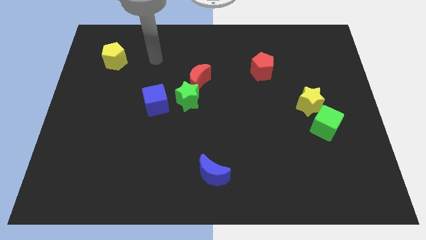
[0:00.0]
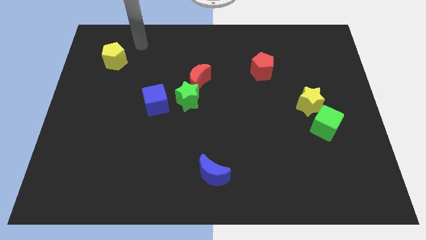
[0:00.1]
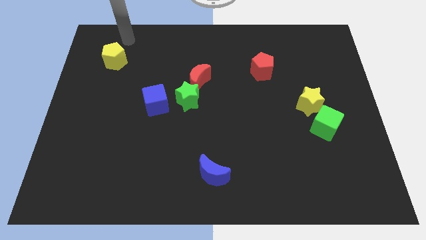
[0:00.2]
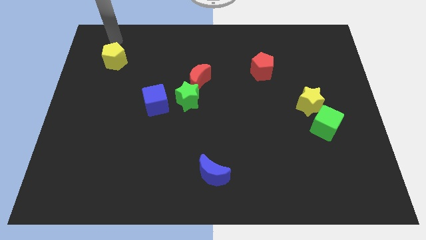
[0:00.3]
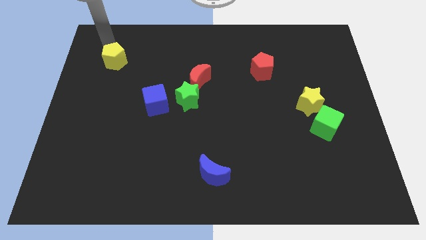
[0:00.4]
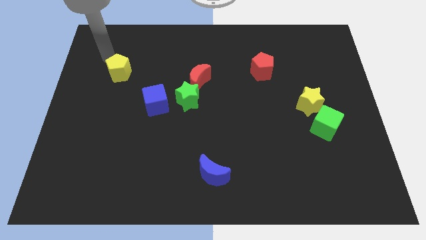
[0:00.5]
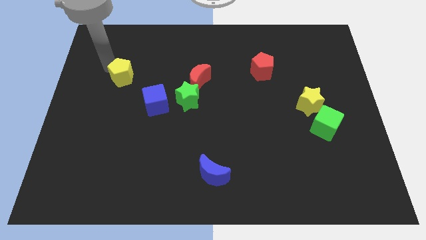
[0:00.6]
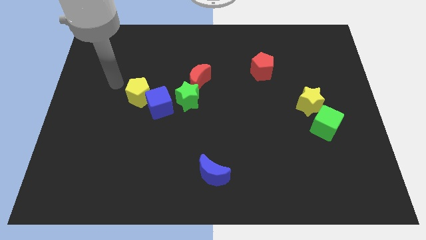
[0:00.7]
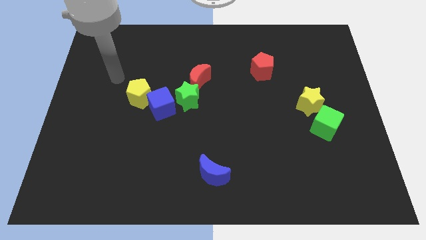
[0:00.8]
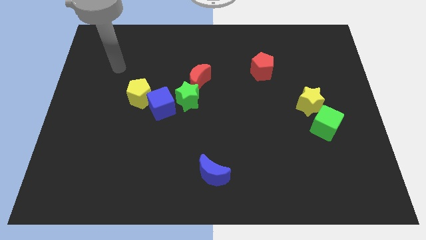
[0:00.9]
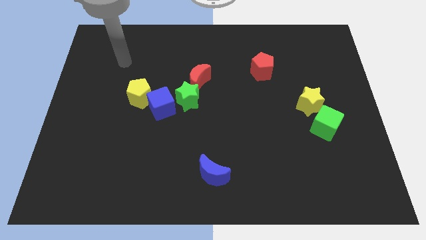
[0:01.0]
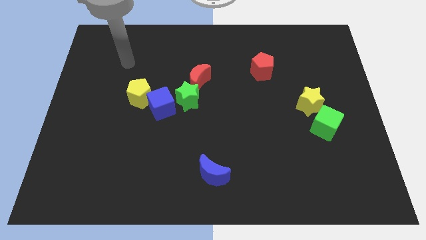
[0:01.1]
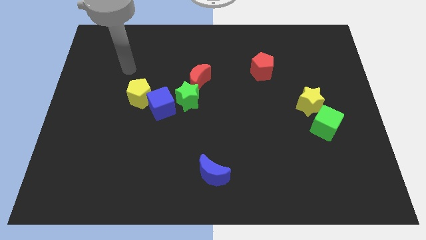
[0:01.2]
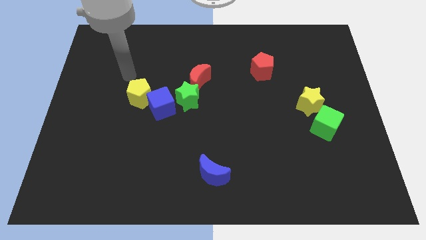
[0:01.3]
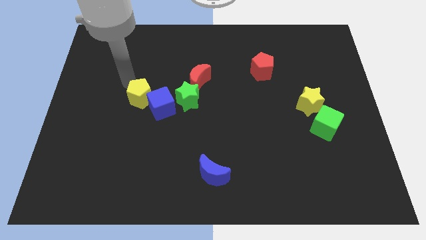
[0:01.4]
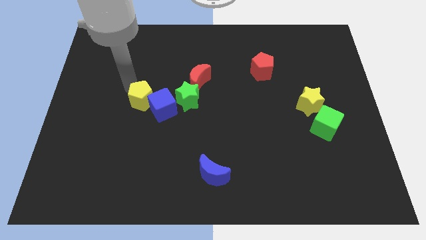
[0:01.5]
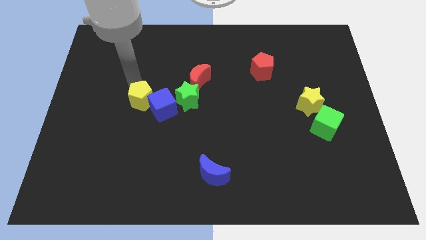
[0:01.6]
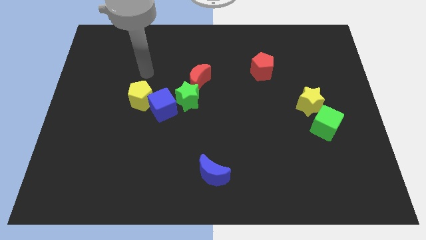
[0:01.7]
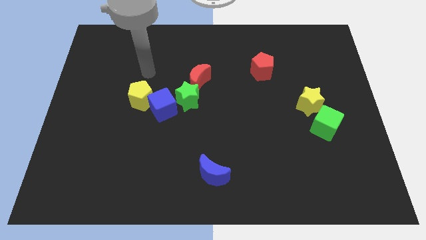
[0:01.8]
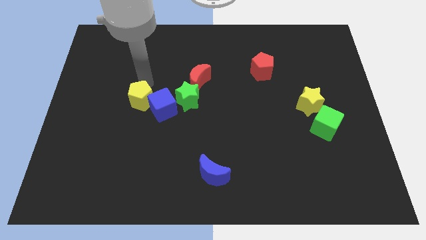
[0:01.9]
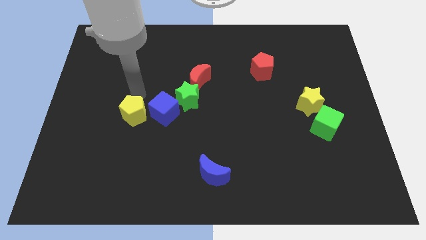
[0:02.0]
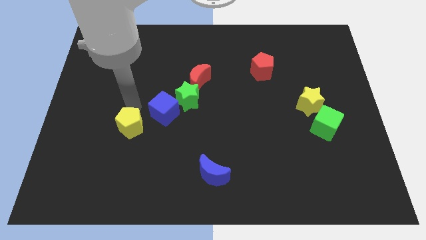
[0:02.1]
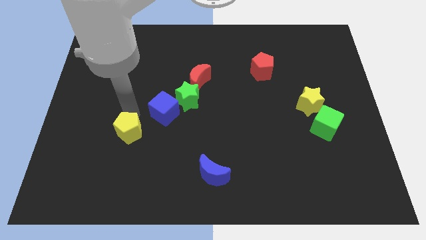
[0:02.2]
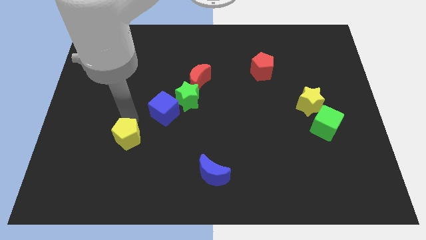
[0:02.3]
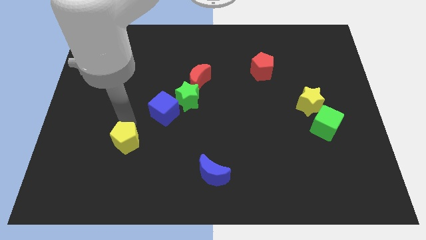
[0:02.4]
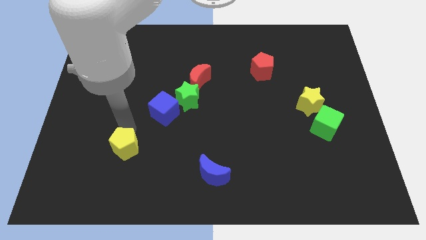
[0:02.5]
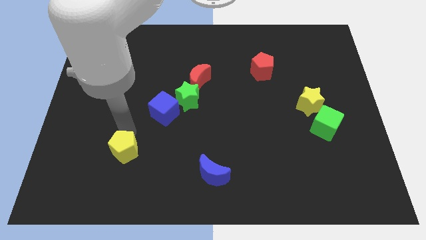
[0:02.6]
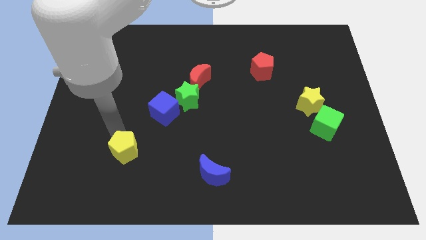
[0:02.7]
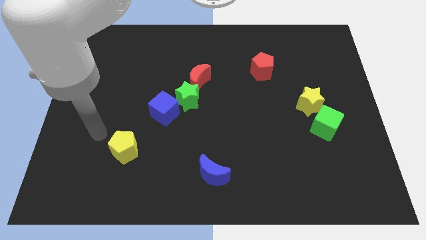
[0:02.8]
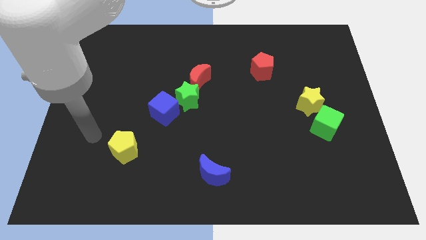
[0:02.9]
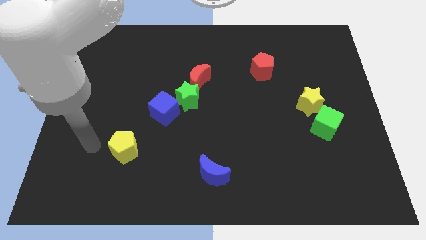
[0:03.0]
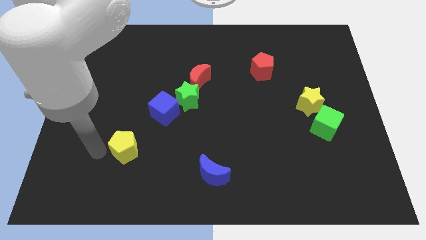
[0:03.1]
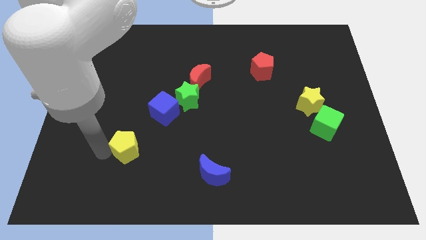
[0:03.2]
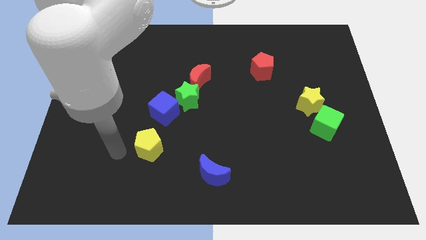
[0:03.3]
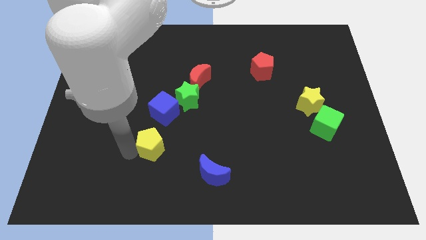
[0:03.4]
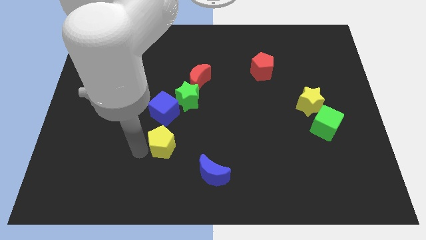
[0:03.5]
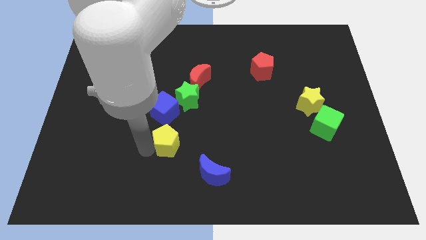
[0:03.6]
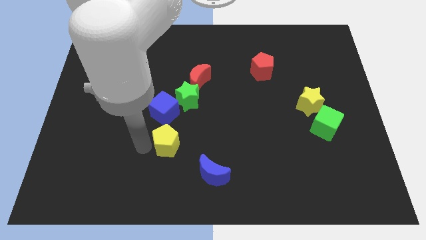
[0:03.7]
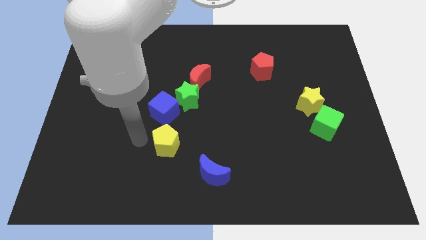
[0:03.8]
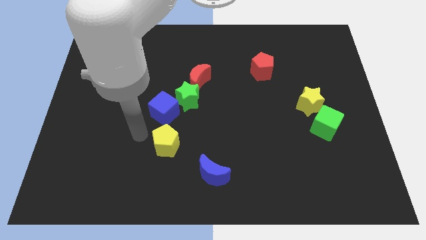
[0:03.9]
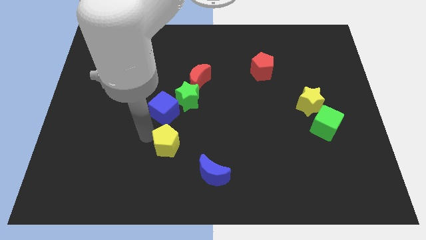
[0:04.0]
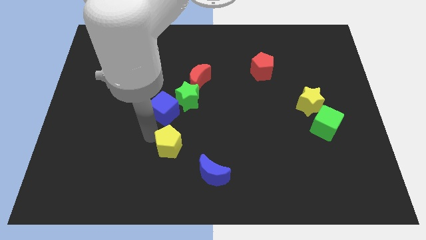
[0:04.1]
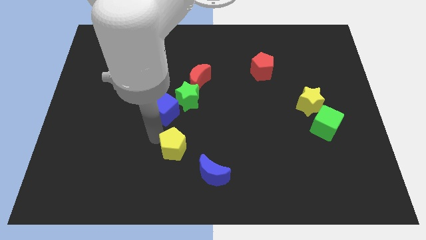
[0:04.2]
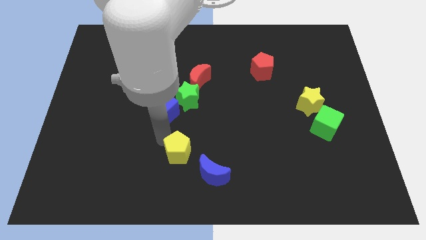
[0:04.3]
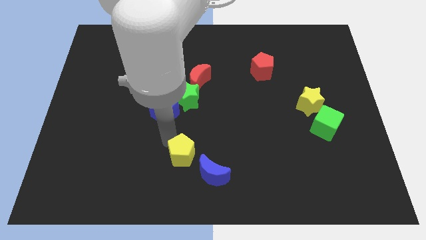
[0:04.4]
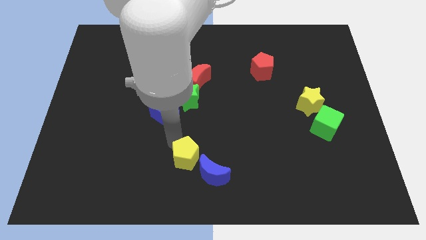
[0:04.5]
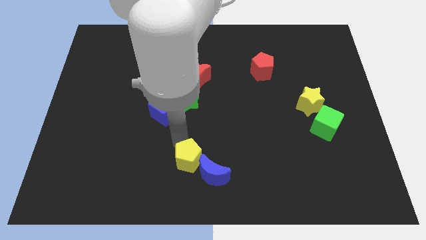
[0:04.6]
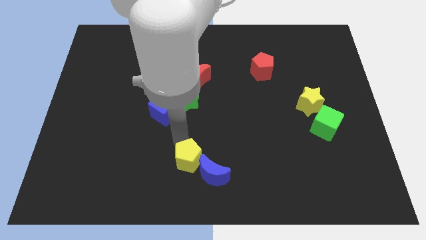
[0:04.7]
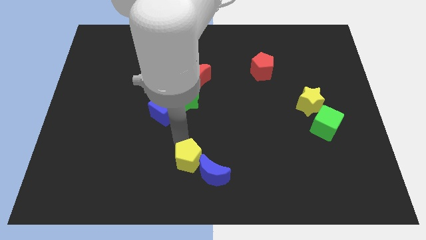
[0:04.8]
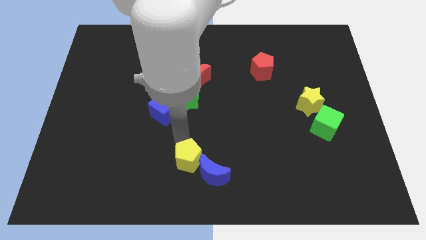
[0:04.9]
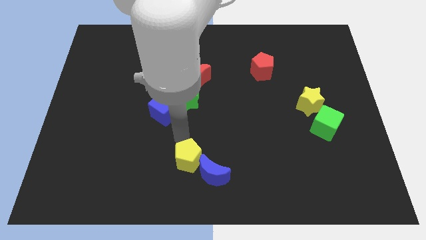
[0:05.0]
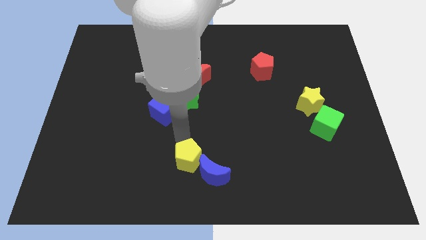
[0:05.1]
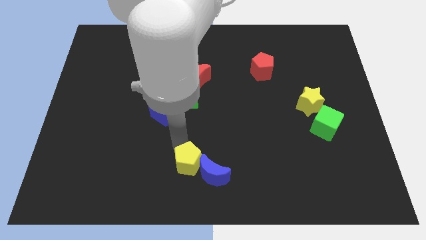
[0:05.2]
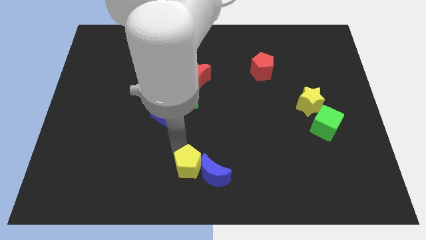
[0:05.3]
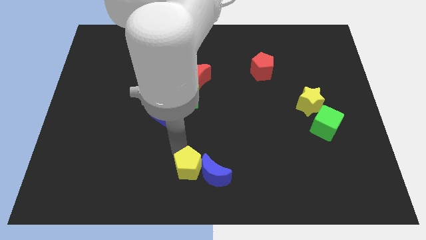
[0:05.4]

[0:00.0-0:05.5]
slide the yellow pentagon close to the blue moon

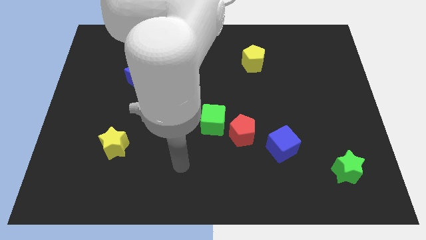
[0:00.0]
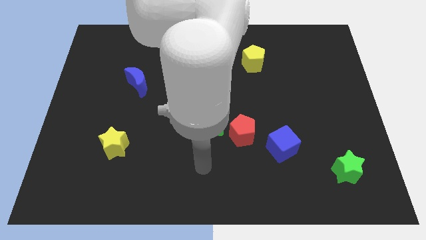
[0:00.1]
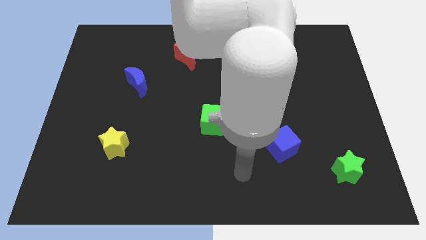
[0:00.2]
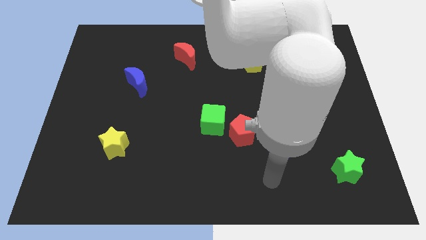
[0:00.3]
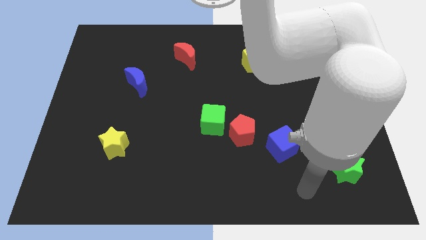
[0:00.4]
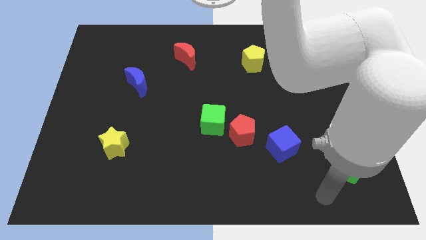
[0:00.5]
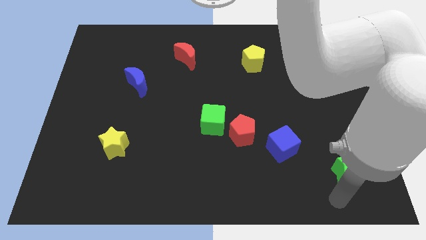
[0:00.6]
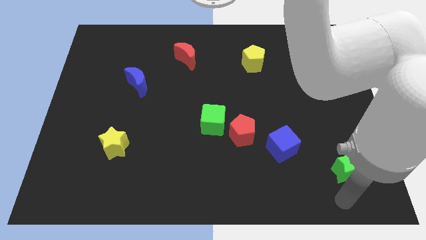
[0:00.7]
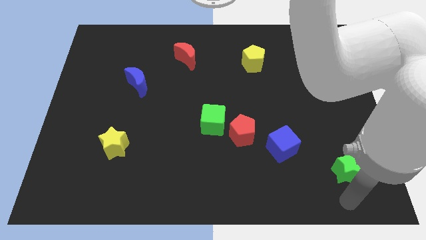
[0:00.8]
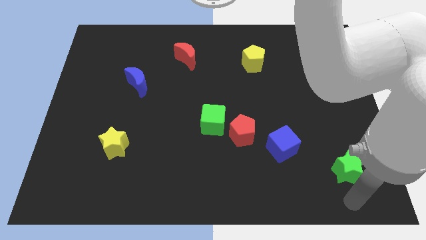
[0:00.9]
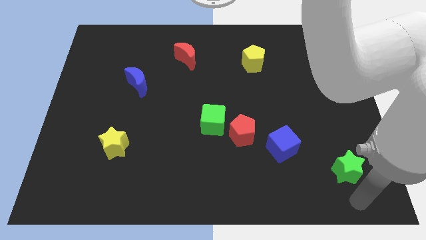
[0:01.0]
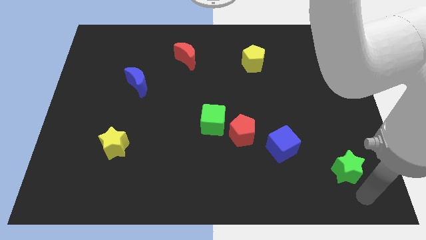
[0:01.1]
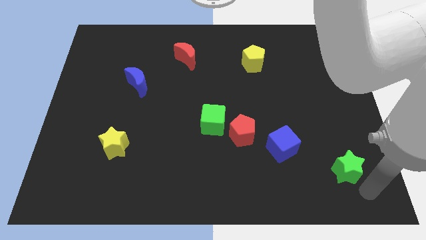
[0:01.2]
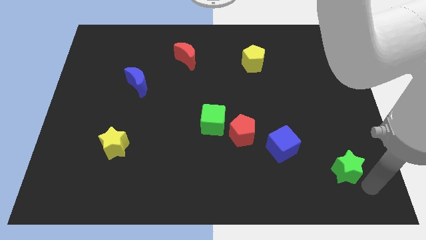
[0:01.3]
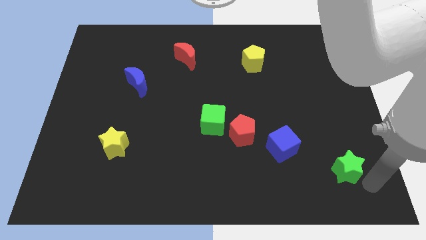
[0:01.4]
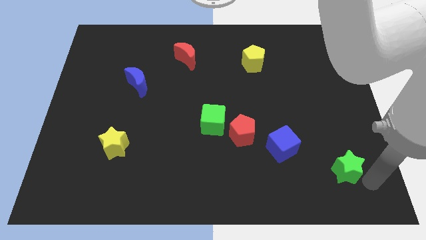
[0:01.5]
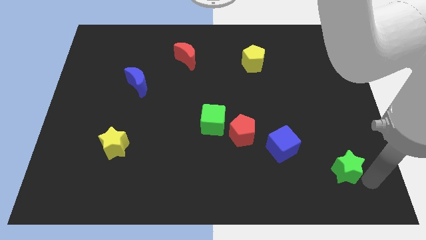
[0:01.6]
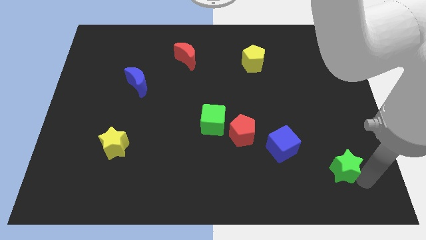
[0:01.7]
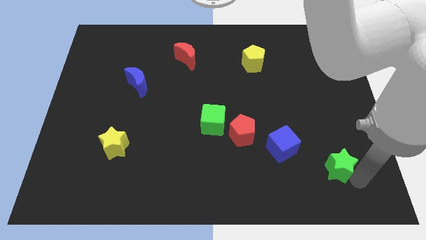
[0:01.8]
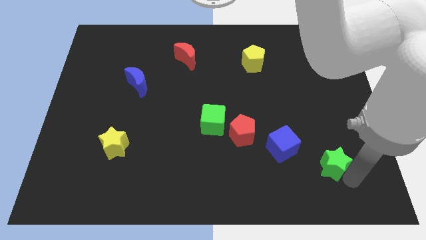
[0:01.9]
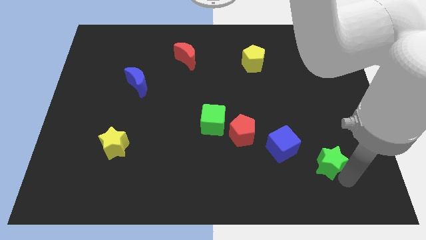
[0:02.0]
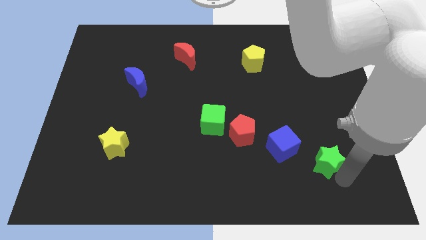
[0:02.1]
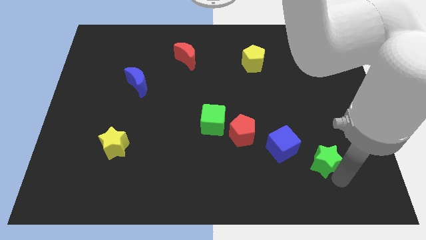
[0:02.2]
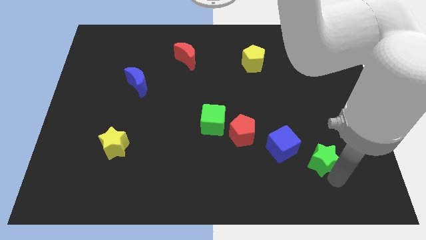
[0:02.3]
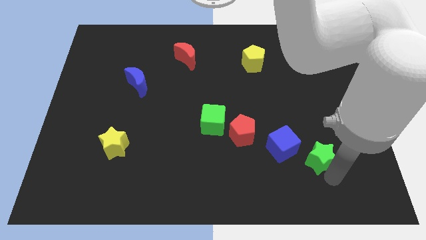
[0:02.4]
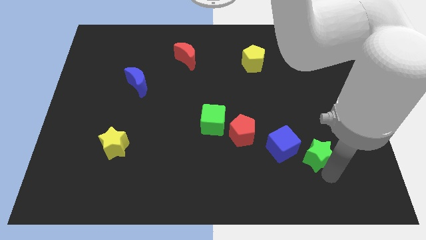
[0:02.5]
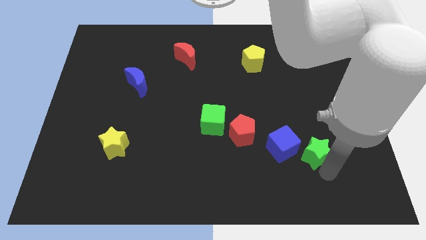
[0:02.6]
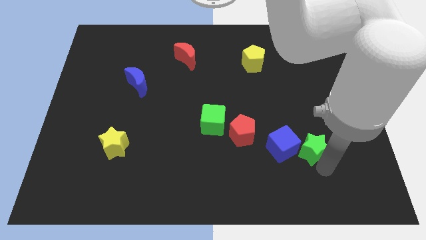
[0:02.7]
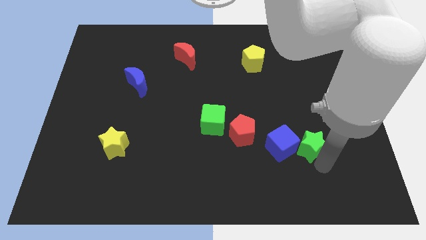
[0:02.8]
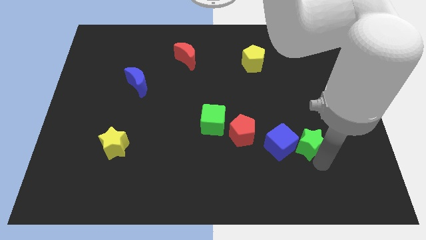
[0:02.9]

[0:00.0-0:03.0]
push the green star to the blue cube

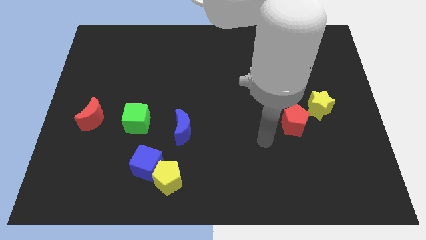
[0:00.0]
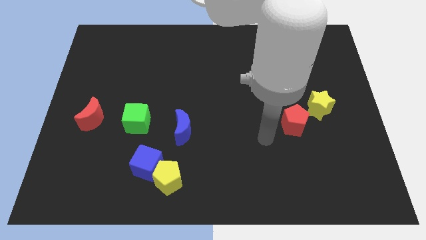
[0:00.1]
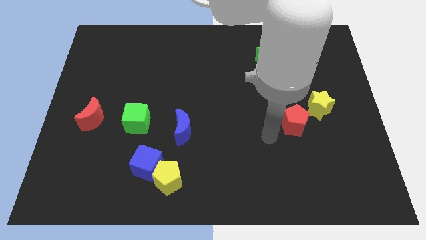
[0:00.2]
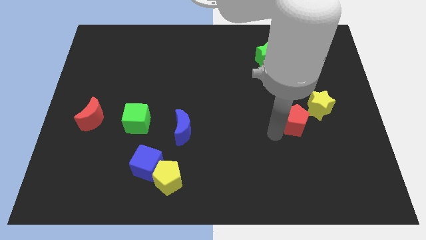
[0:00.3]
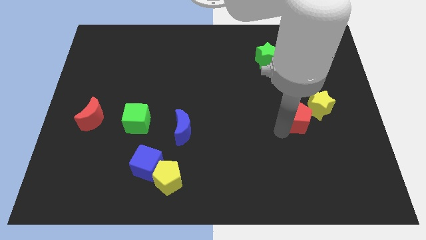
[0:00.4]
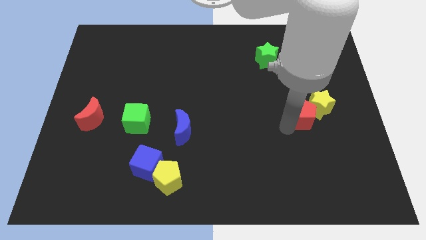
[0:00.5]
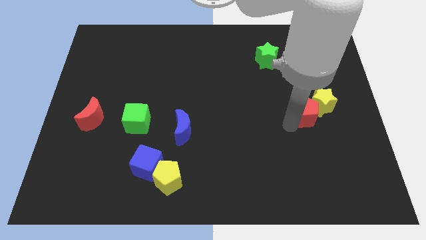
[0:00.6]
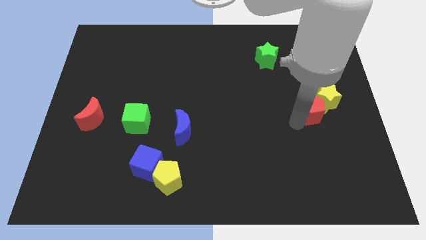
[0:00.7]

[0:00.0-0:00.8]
move the red pentagon next to the yellow star
